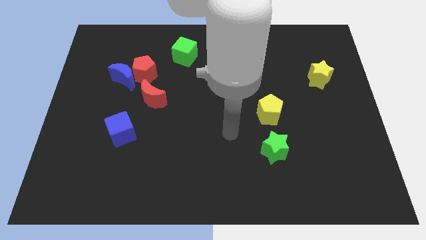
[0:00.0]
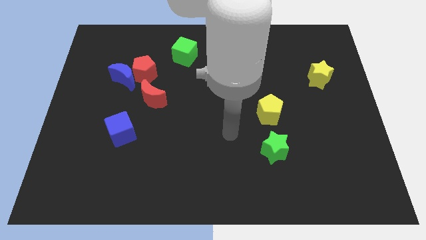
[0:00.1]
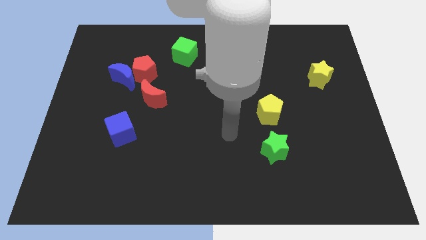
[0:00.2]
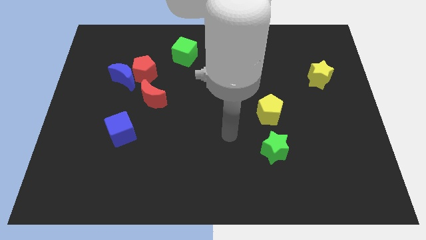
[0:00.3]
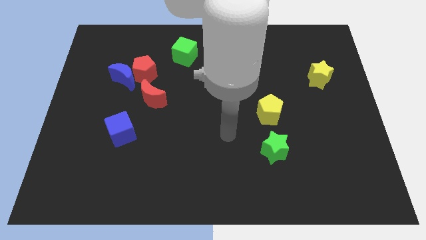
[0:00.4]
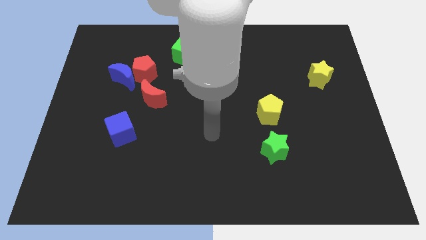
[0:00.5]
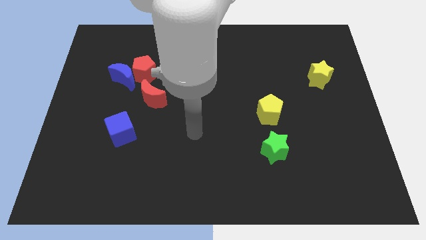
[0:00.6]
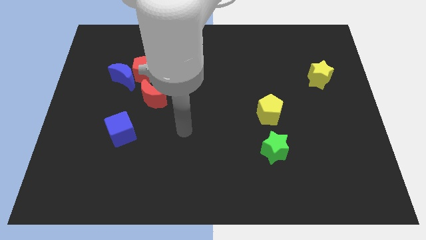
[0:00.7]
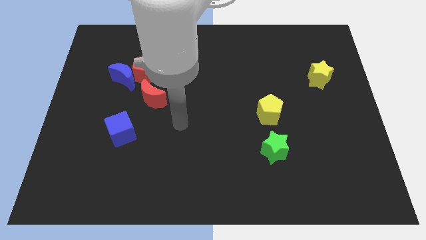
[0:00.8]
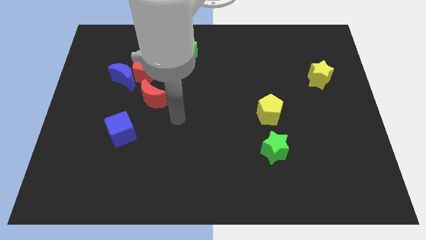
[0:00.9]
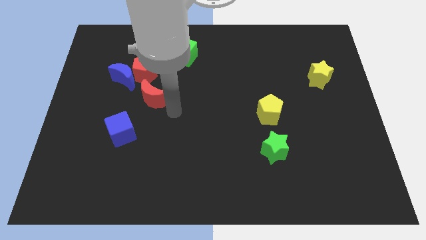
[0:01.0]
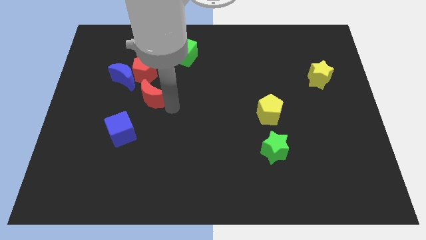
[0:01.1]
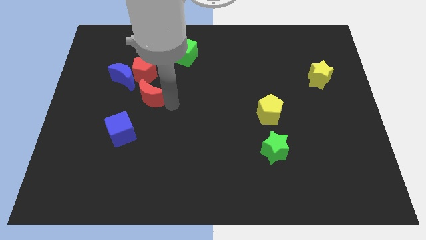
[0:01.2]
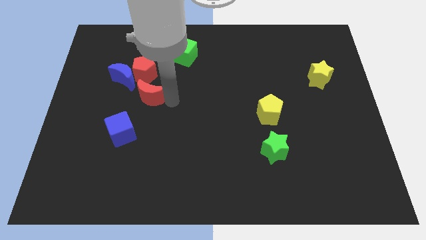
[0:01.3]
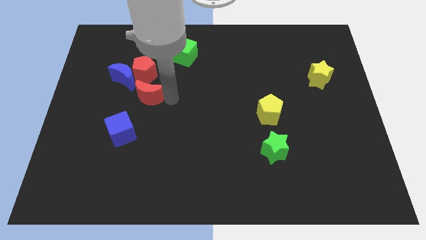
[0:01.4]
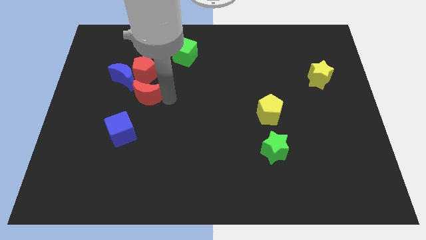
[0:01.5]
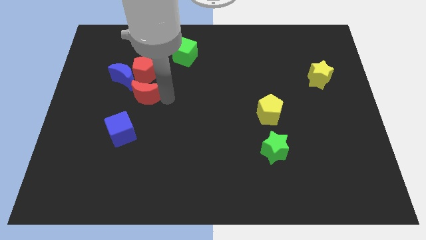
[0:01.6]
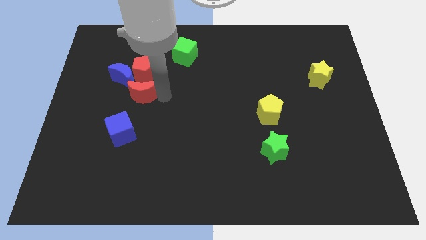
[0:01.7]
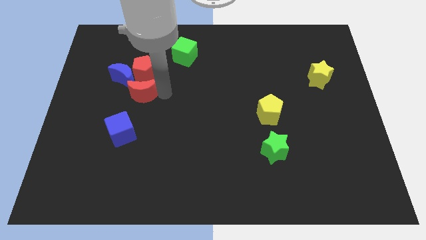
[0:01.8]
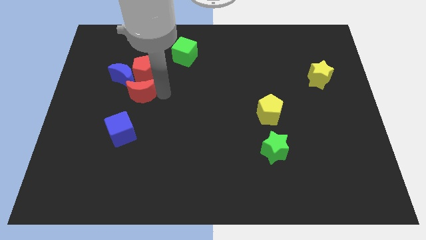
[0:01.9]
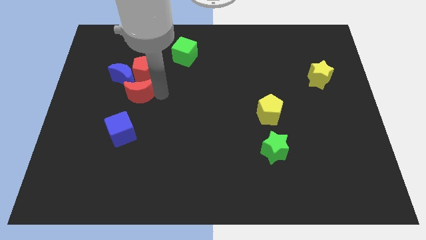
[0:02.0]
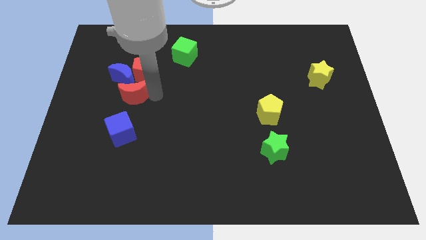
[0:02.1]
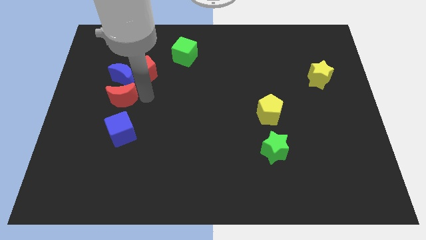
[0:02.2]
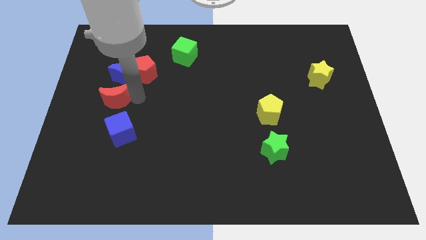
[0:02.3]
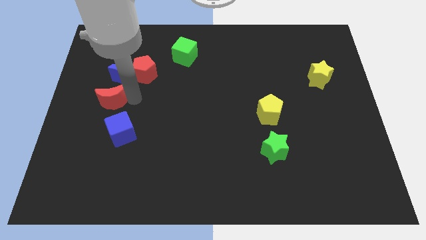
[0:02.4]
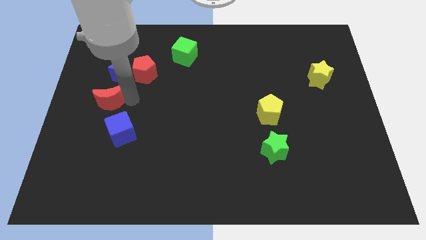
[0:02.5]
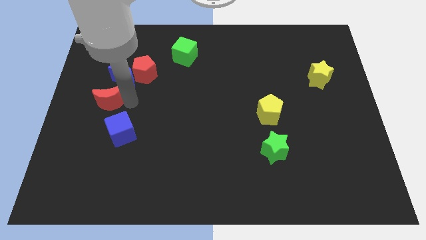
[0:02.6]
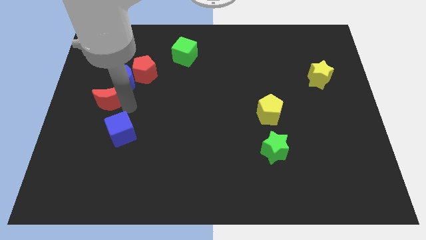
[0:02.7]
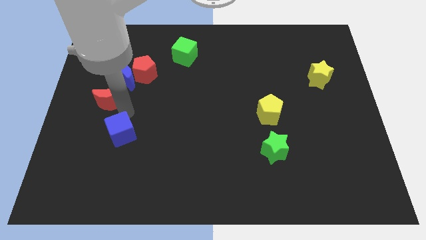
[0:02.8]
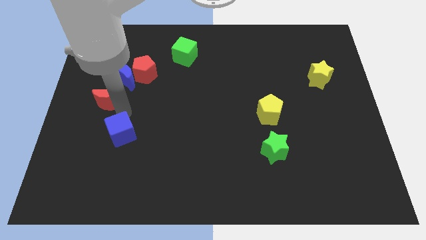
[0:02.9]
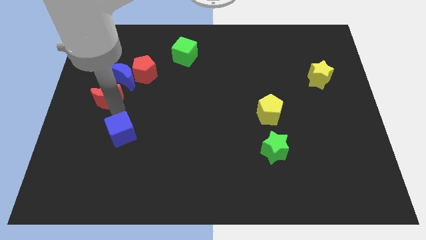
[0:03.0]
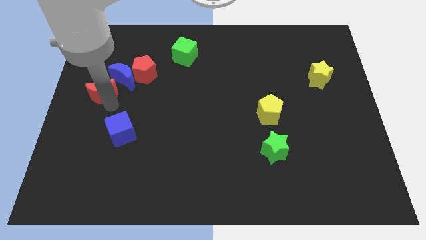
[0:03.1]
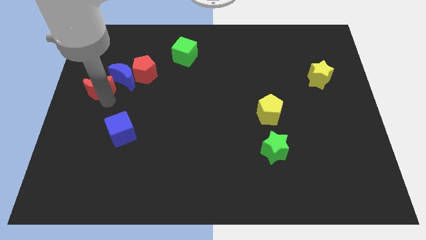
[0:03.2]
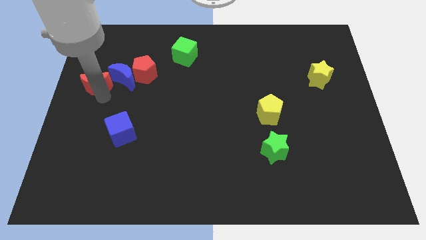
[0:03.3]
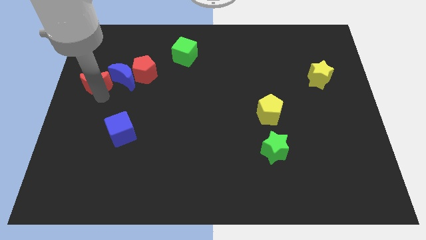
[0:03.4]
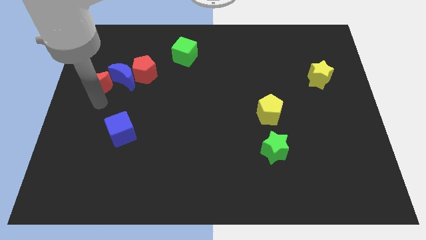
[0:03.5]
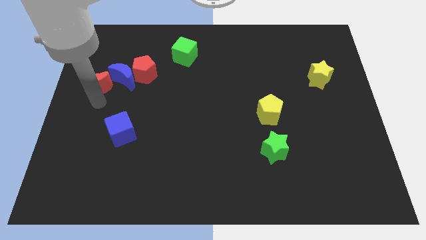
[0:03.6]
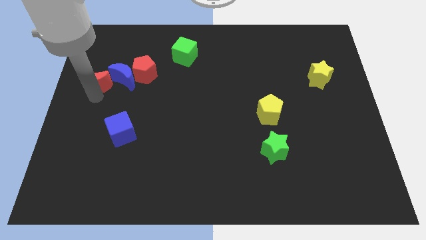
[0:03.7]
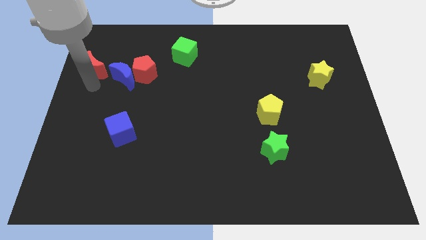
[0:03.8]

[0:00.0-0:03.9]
push the red crescent to the left of the blue crescent

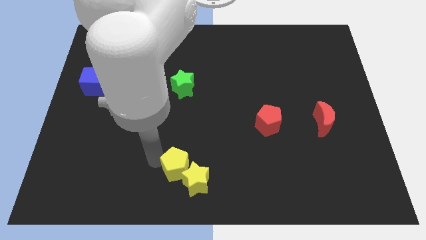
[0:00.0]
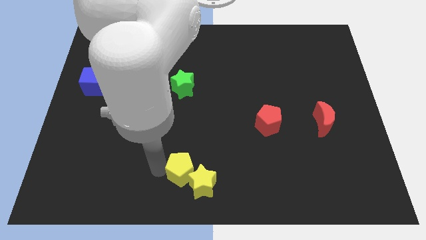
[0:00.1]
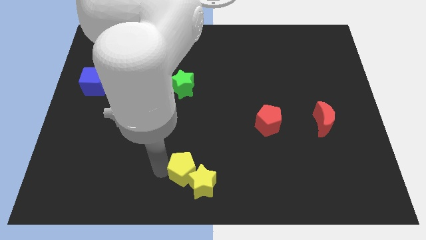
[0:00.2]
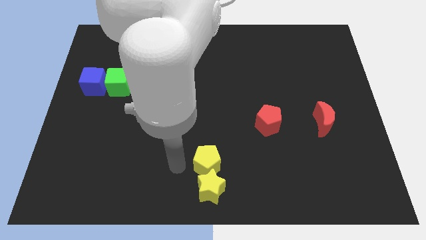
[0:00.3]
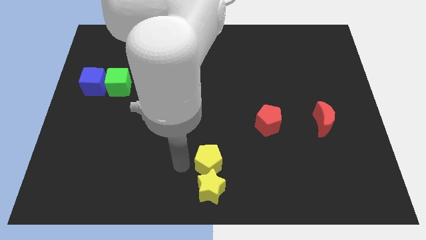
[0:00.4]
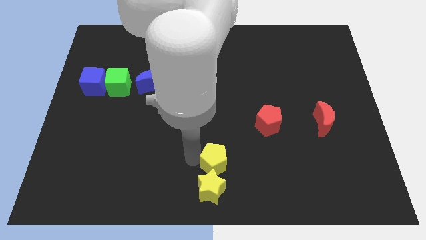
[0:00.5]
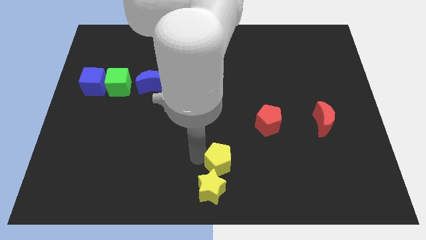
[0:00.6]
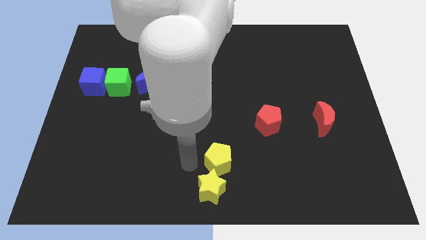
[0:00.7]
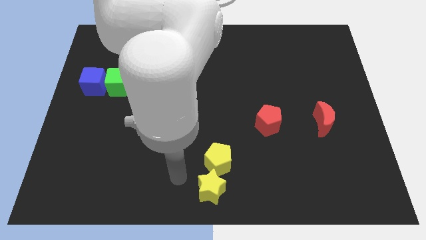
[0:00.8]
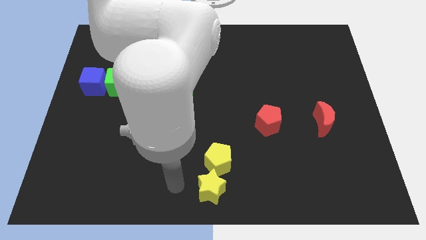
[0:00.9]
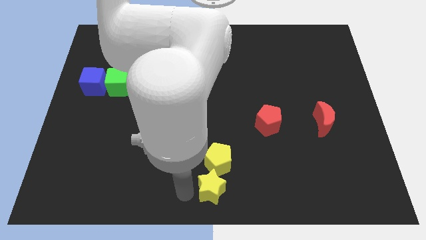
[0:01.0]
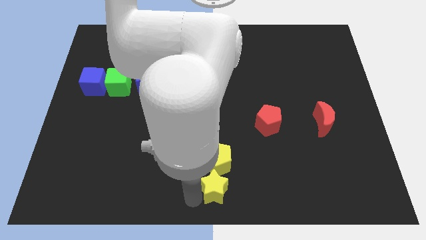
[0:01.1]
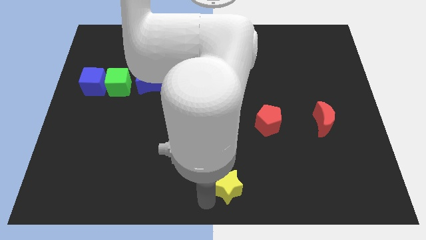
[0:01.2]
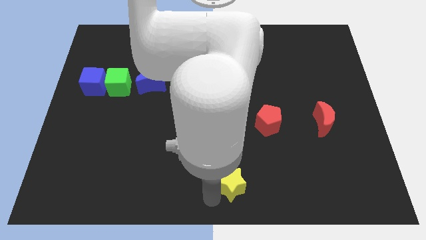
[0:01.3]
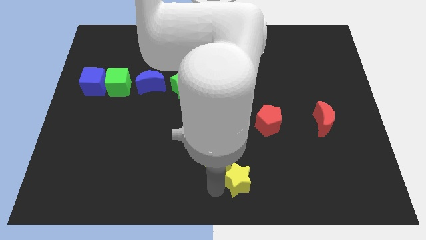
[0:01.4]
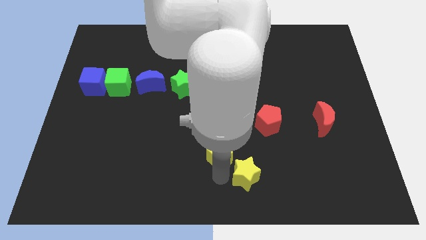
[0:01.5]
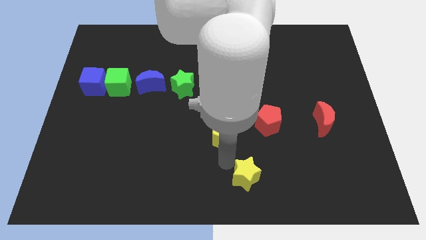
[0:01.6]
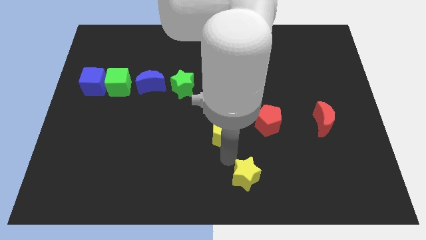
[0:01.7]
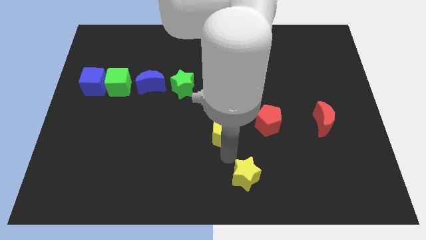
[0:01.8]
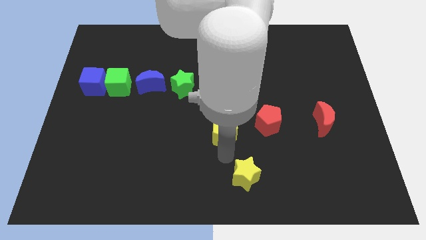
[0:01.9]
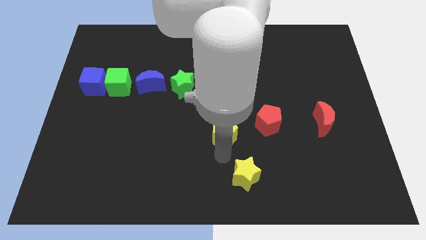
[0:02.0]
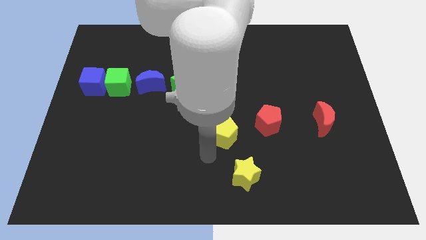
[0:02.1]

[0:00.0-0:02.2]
separate the yellow blocks

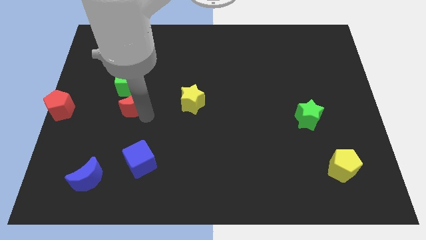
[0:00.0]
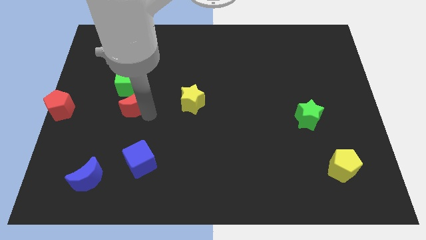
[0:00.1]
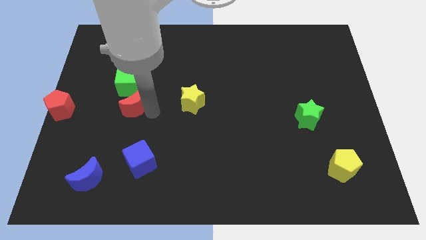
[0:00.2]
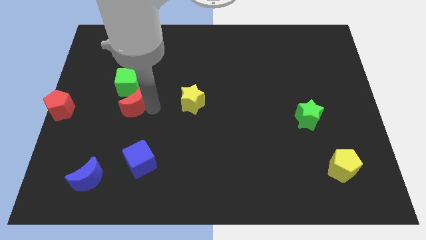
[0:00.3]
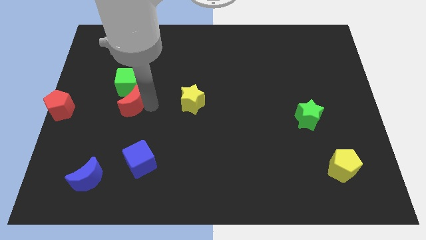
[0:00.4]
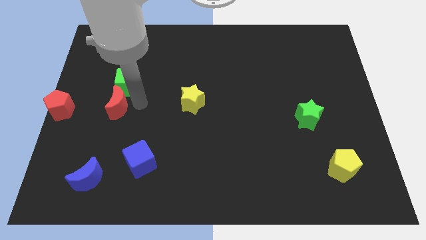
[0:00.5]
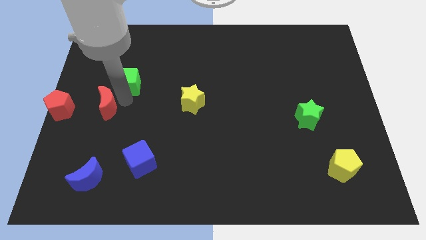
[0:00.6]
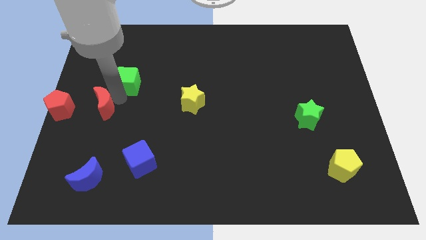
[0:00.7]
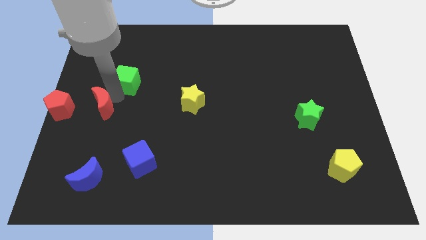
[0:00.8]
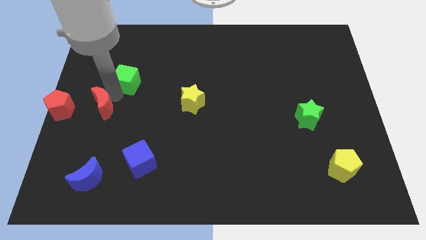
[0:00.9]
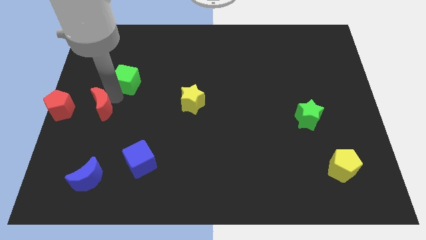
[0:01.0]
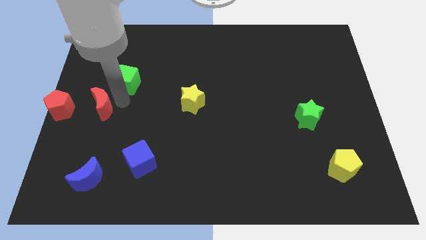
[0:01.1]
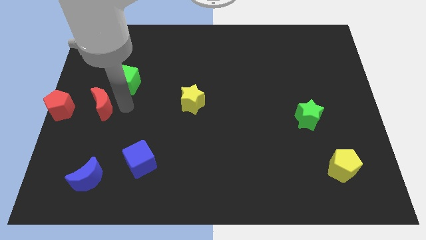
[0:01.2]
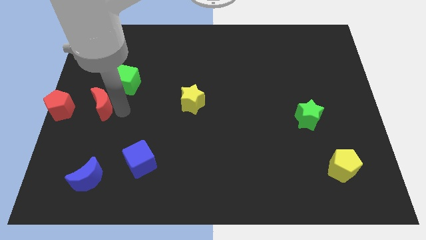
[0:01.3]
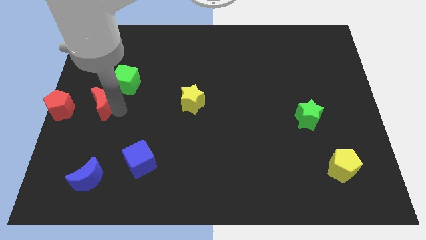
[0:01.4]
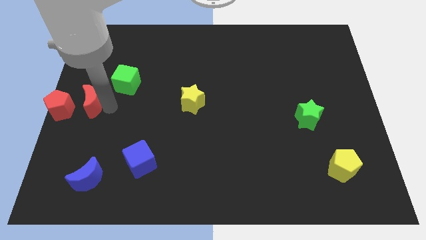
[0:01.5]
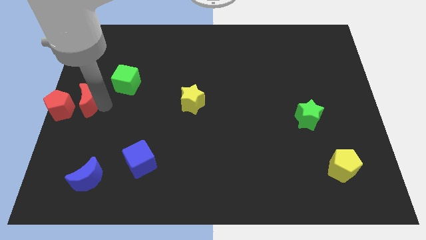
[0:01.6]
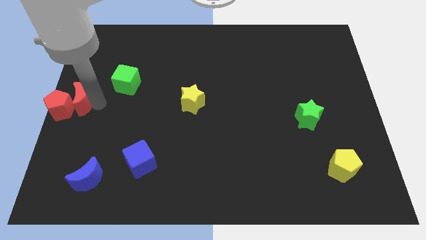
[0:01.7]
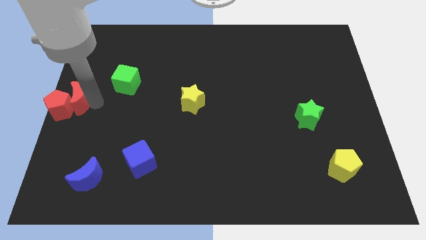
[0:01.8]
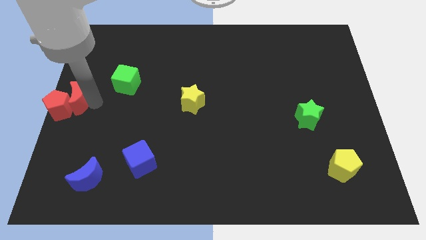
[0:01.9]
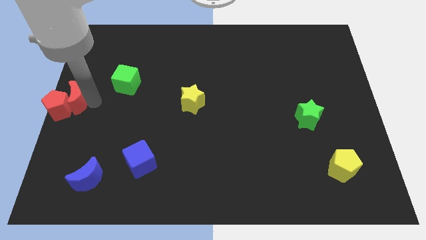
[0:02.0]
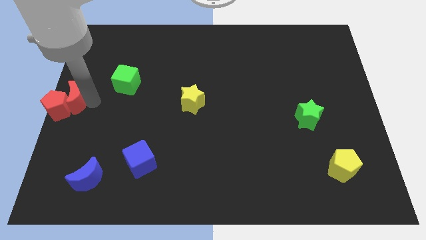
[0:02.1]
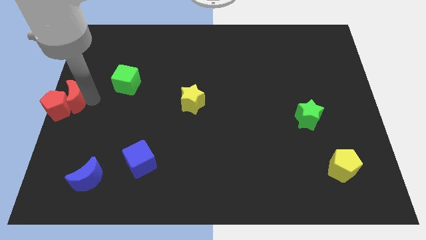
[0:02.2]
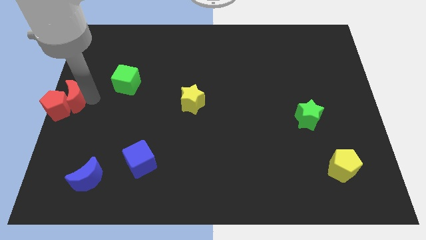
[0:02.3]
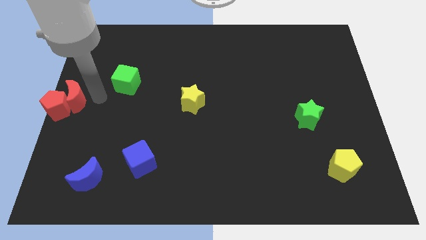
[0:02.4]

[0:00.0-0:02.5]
place the red crescent right to the the red pentagon

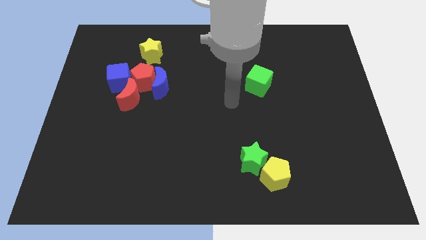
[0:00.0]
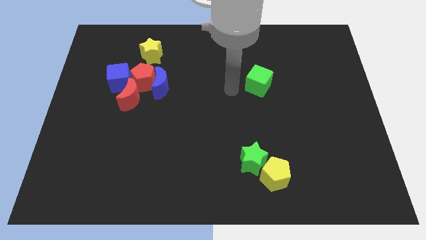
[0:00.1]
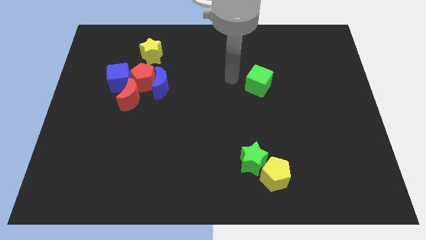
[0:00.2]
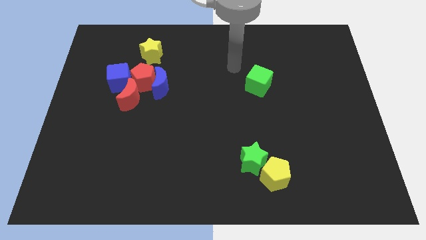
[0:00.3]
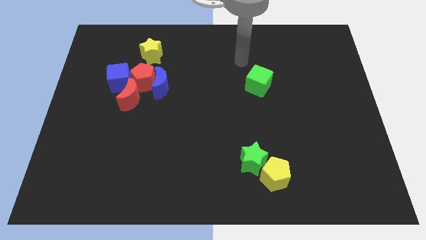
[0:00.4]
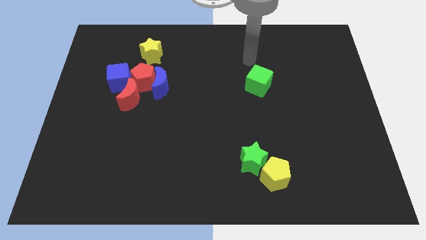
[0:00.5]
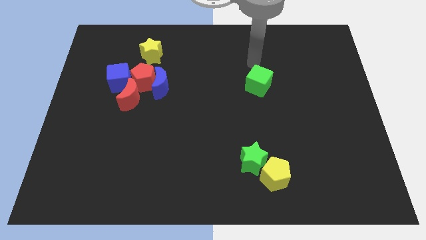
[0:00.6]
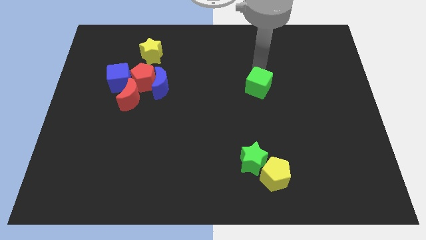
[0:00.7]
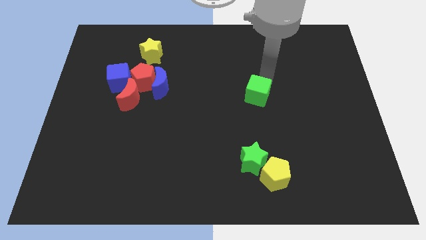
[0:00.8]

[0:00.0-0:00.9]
move the arm into the green cube
